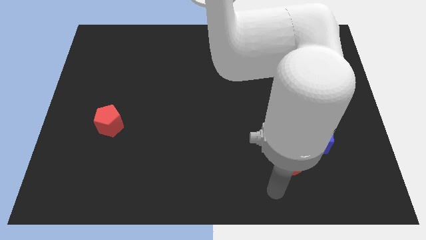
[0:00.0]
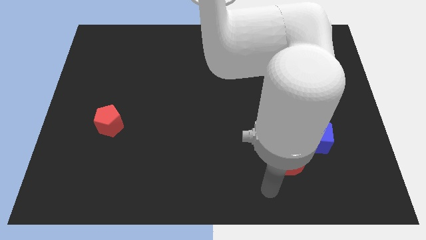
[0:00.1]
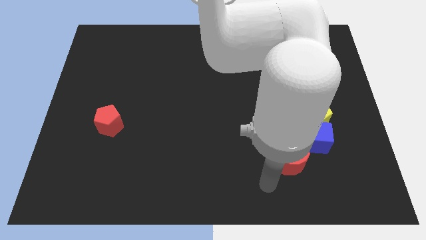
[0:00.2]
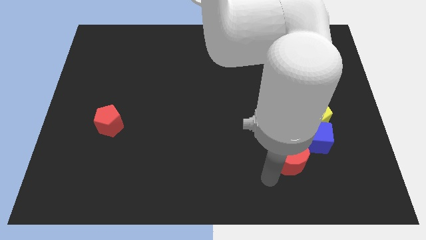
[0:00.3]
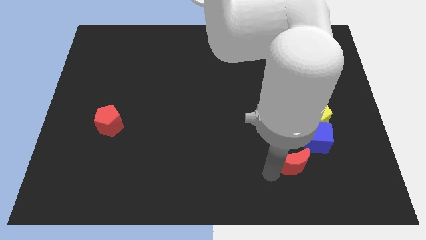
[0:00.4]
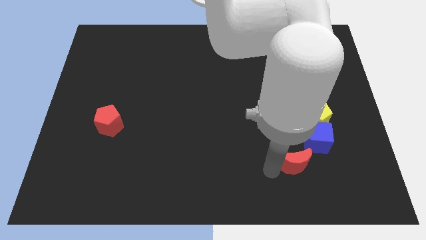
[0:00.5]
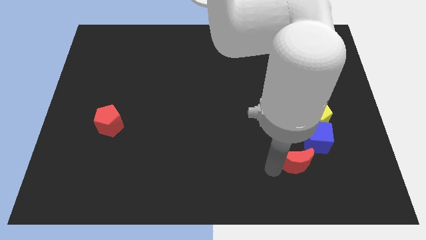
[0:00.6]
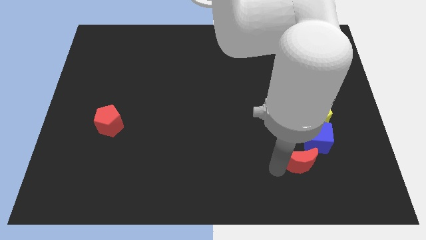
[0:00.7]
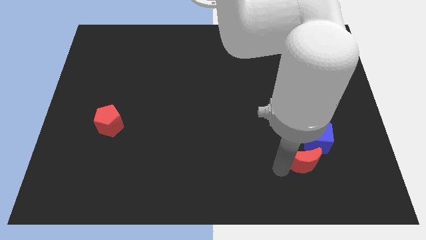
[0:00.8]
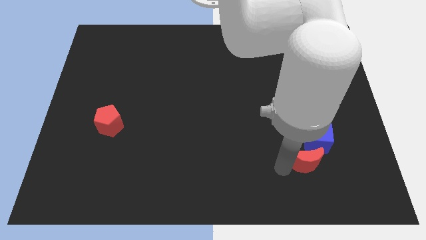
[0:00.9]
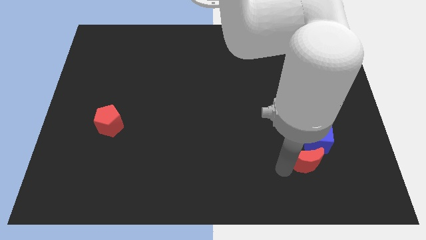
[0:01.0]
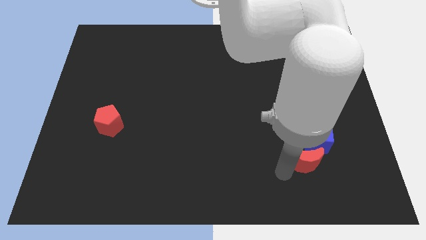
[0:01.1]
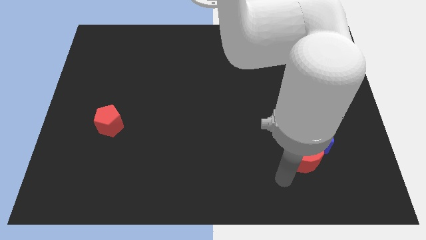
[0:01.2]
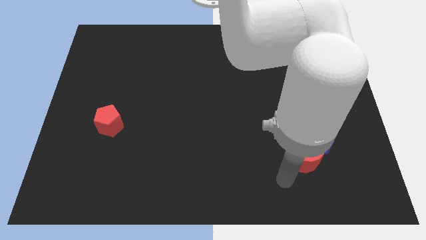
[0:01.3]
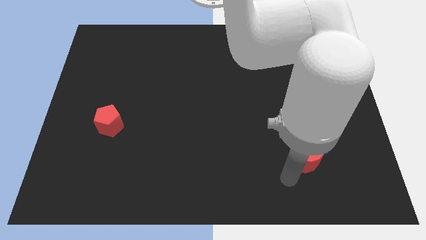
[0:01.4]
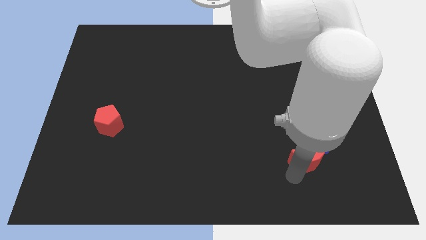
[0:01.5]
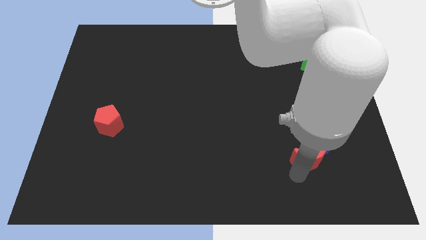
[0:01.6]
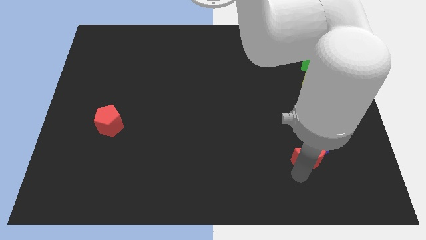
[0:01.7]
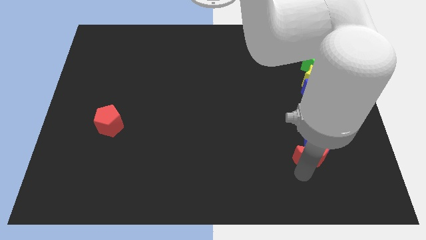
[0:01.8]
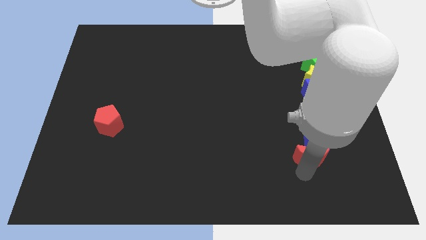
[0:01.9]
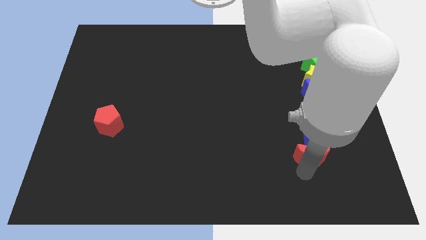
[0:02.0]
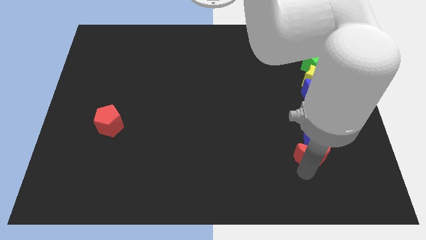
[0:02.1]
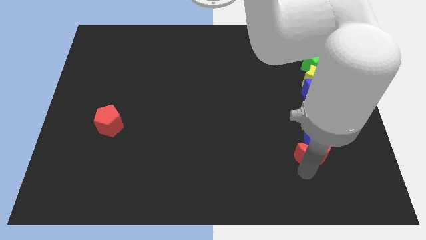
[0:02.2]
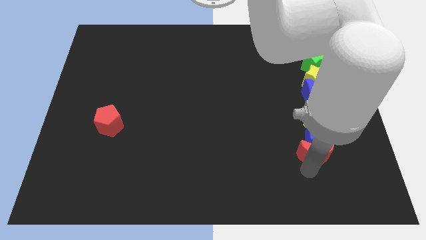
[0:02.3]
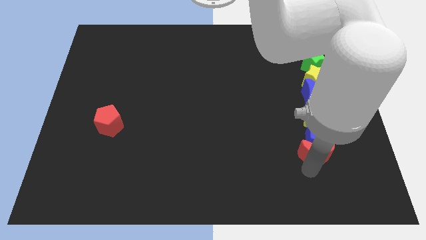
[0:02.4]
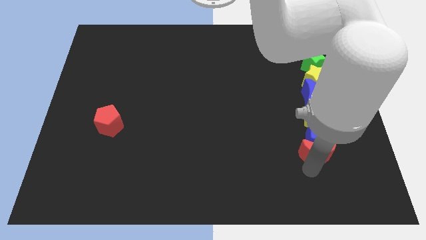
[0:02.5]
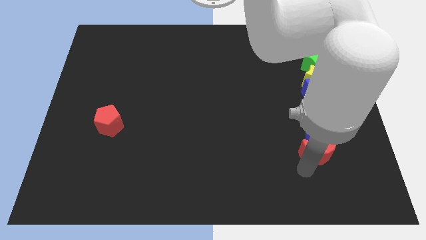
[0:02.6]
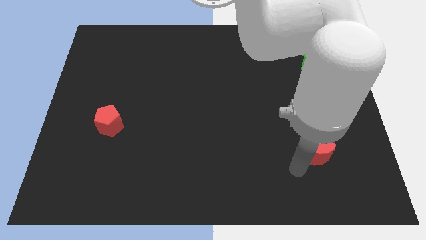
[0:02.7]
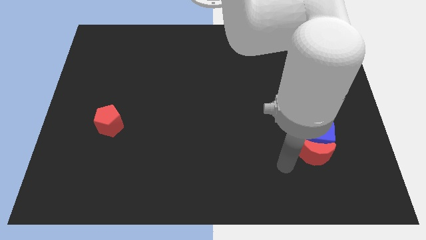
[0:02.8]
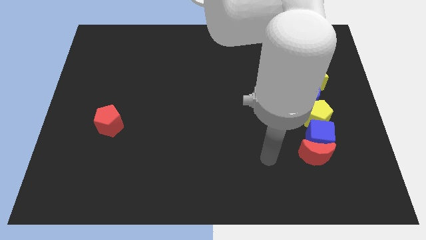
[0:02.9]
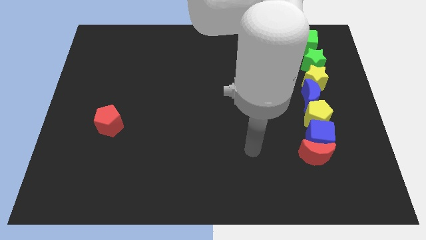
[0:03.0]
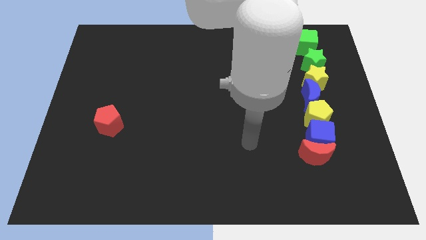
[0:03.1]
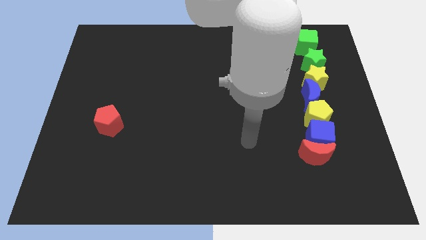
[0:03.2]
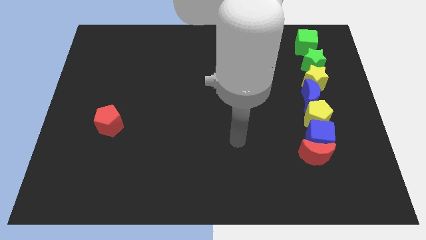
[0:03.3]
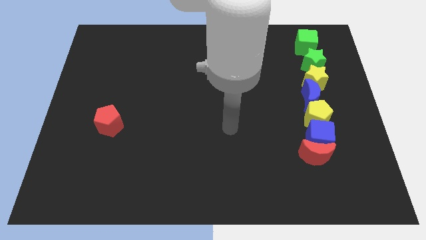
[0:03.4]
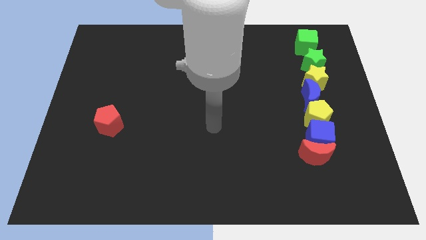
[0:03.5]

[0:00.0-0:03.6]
move the red moon into the bottom of the blue cube

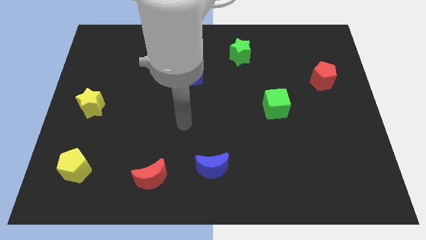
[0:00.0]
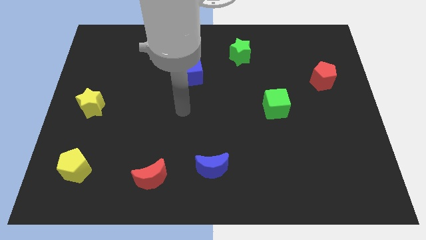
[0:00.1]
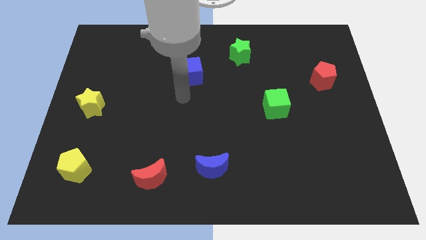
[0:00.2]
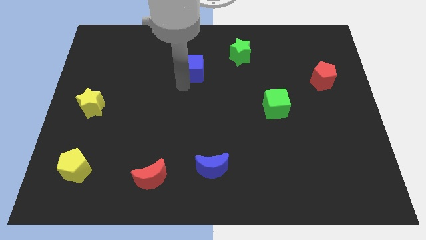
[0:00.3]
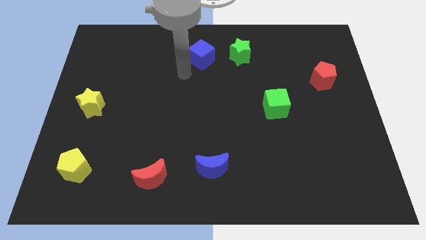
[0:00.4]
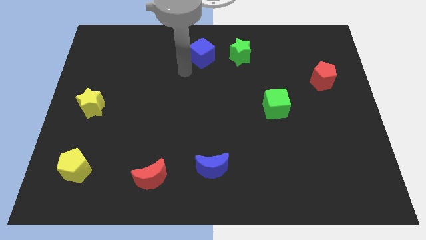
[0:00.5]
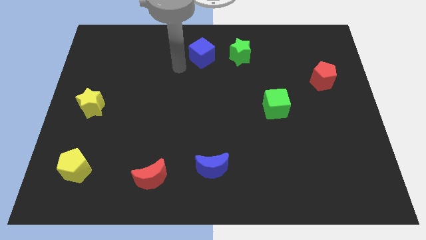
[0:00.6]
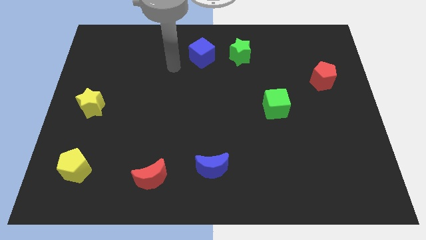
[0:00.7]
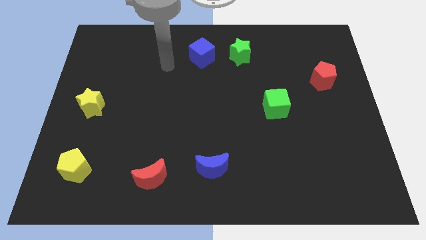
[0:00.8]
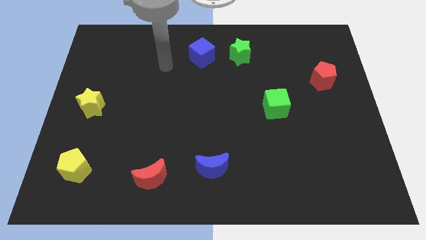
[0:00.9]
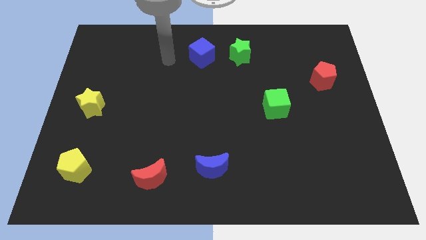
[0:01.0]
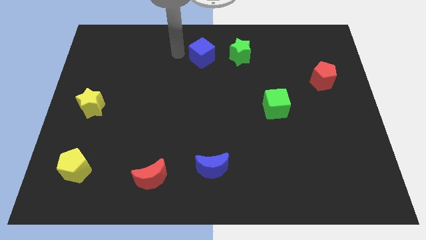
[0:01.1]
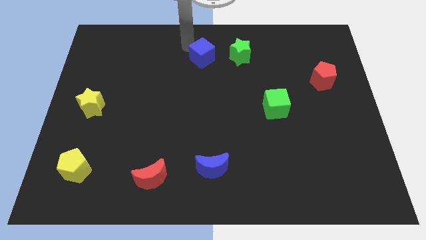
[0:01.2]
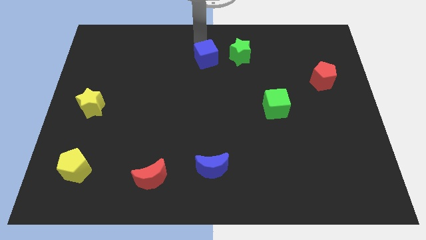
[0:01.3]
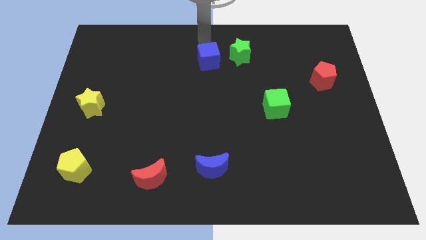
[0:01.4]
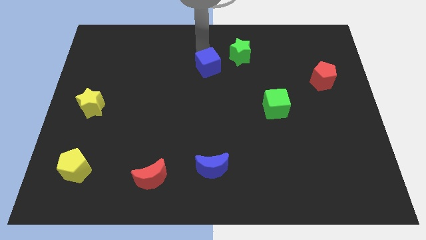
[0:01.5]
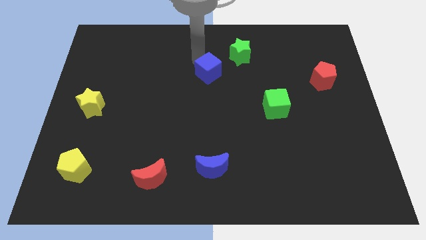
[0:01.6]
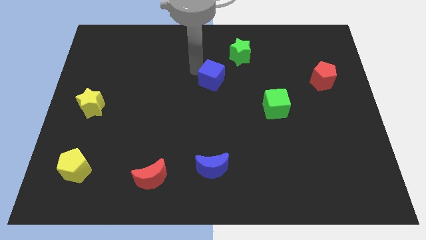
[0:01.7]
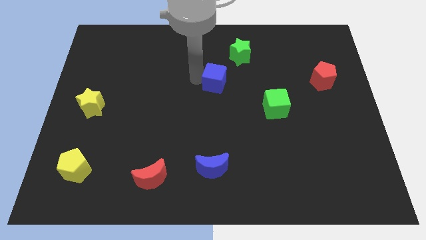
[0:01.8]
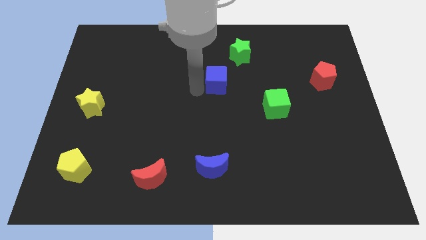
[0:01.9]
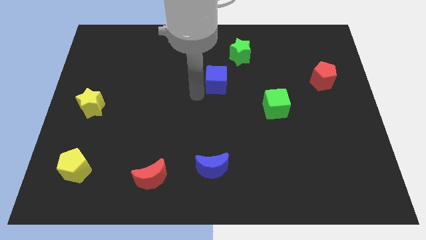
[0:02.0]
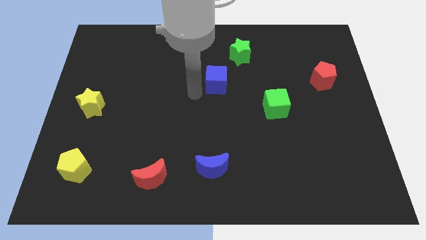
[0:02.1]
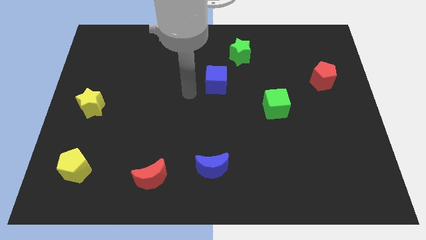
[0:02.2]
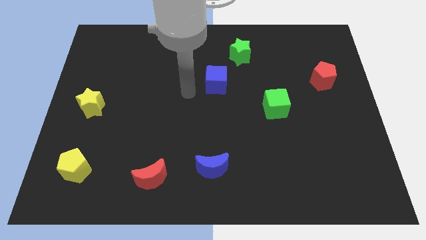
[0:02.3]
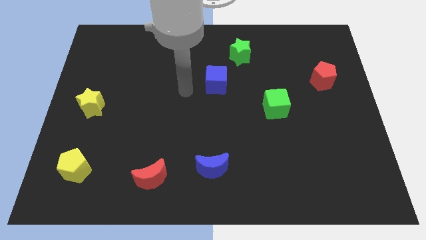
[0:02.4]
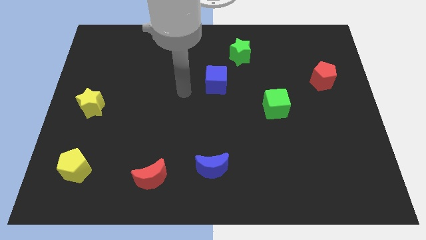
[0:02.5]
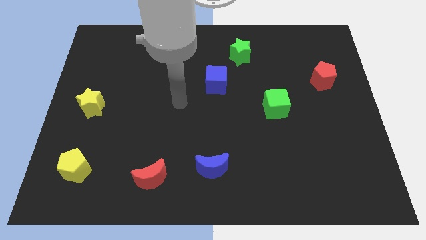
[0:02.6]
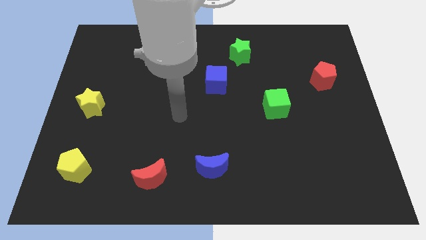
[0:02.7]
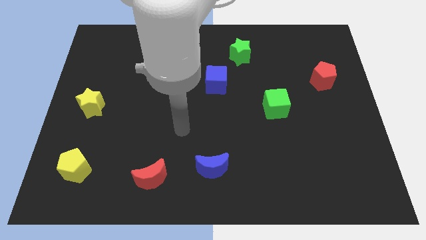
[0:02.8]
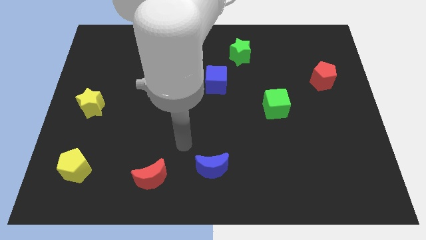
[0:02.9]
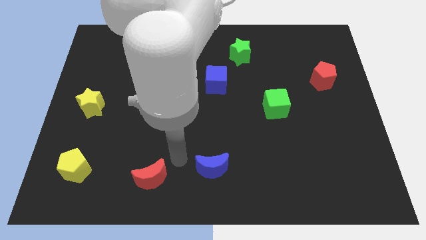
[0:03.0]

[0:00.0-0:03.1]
move the blue cube to the bottom left of the green star

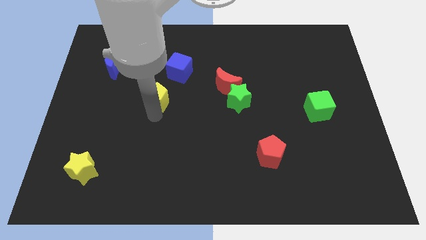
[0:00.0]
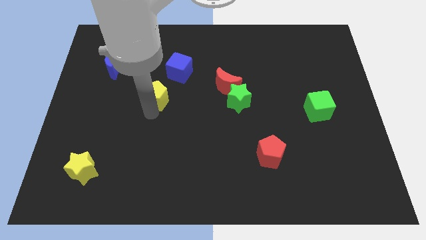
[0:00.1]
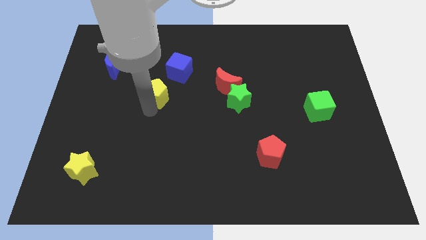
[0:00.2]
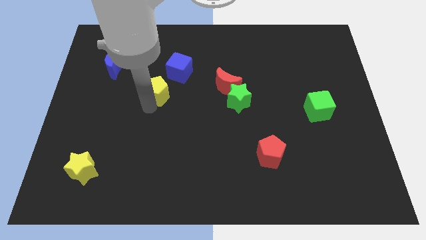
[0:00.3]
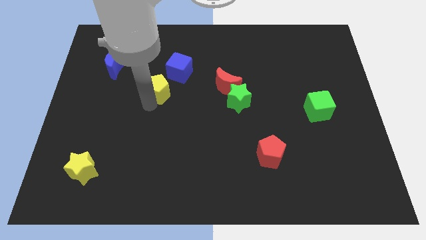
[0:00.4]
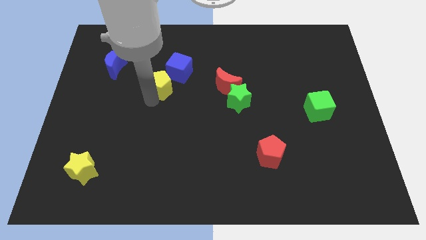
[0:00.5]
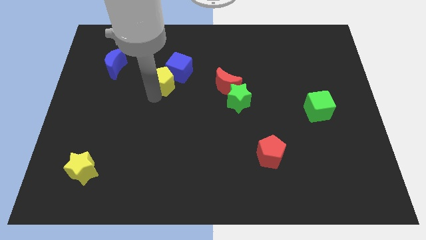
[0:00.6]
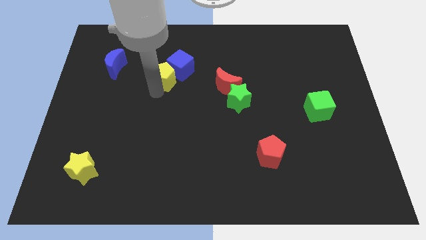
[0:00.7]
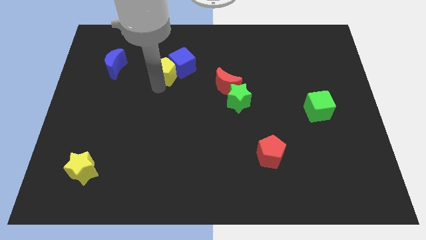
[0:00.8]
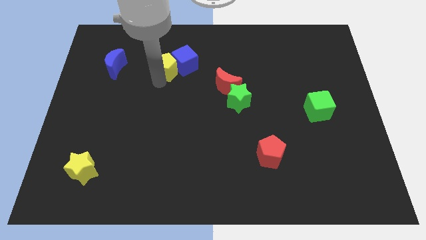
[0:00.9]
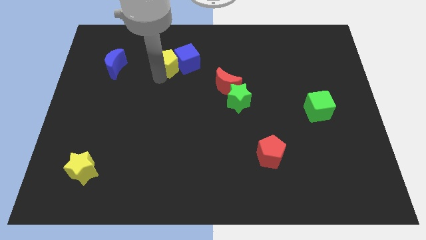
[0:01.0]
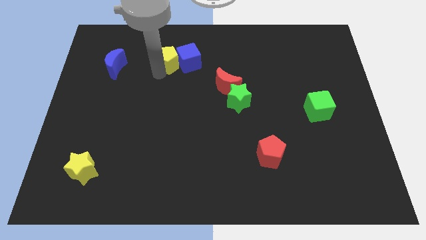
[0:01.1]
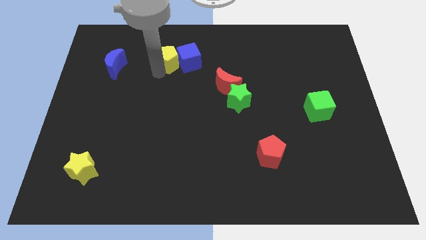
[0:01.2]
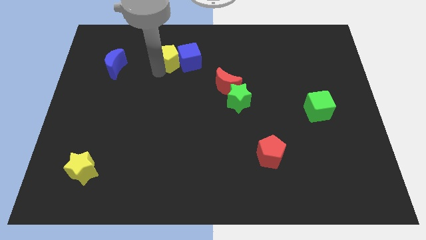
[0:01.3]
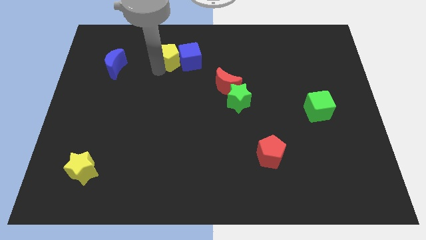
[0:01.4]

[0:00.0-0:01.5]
push the yellow pentagon into the blue cube

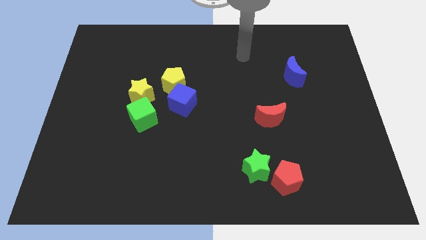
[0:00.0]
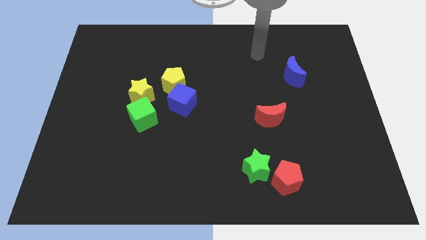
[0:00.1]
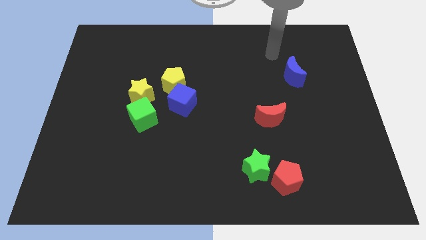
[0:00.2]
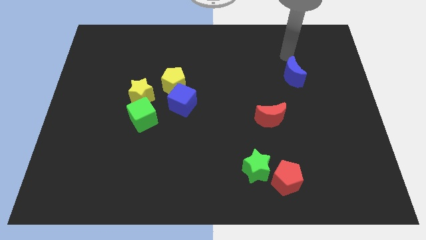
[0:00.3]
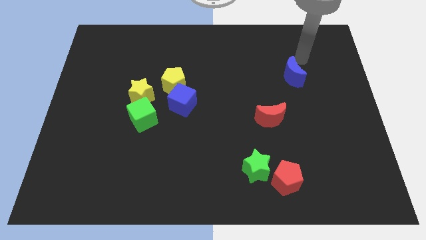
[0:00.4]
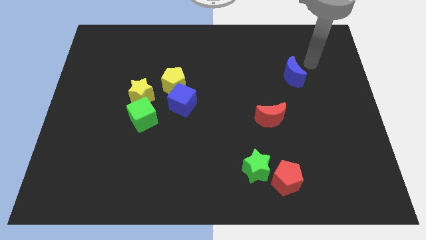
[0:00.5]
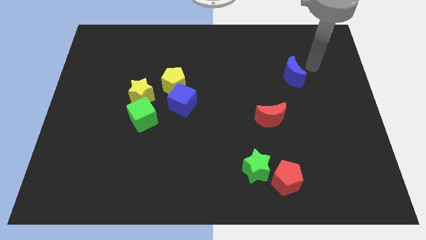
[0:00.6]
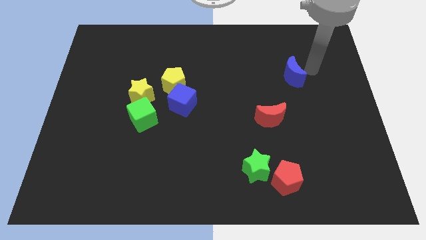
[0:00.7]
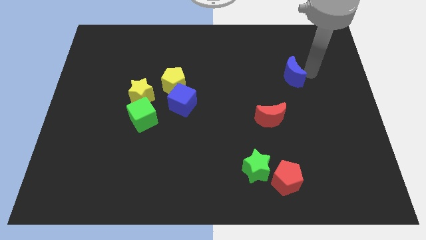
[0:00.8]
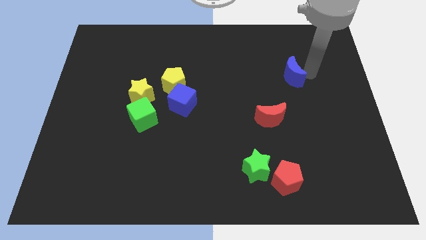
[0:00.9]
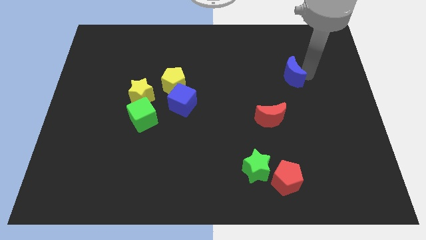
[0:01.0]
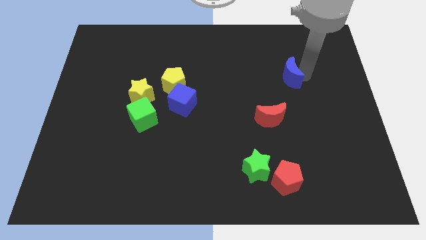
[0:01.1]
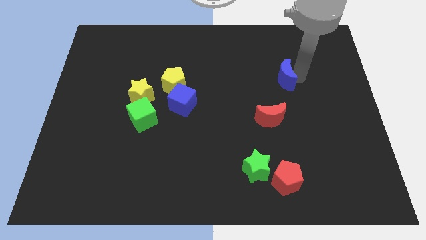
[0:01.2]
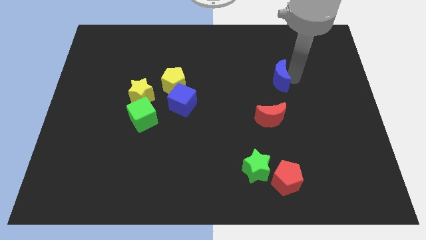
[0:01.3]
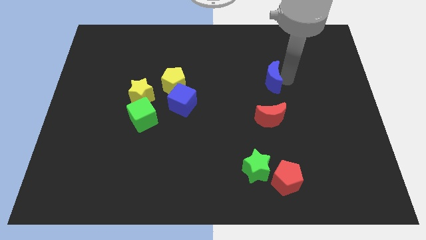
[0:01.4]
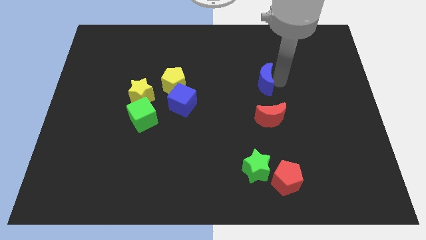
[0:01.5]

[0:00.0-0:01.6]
place the blue moon above the red moon
